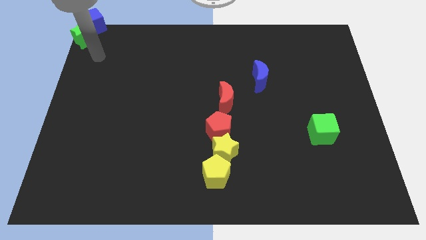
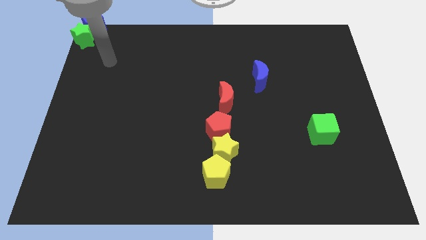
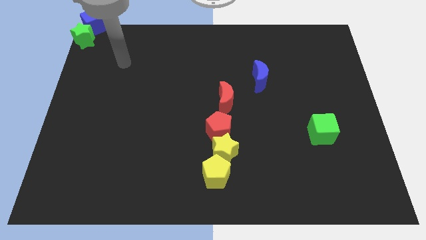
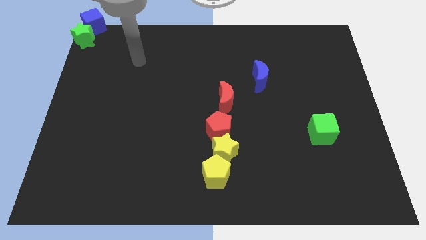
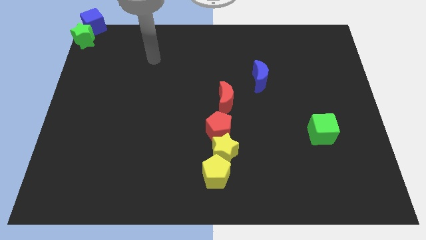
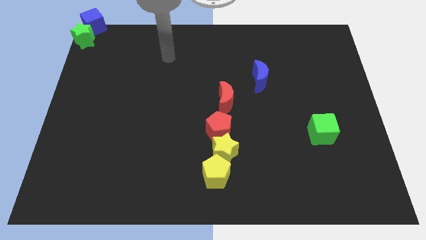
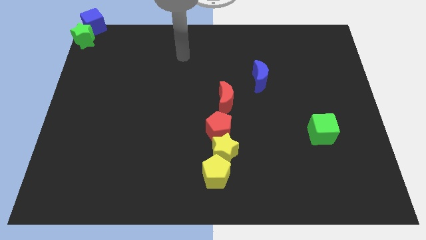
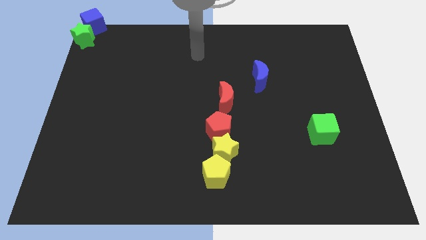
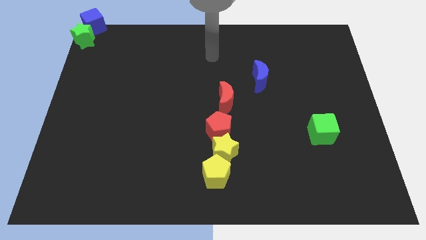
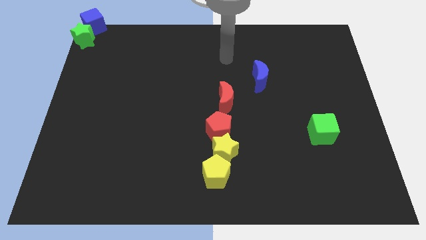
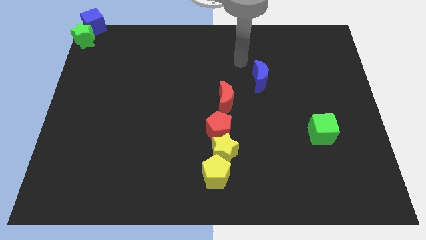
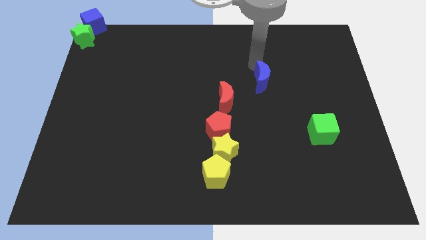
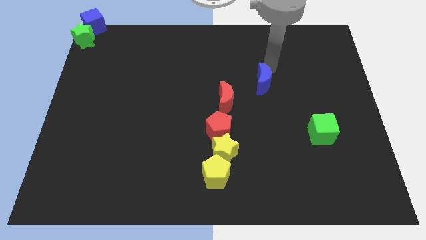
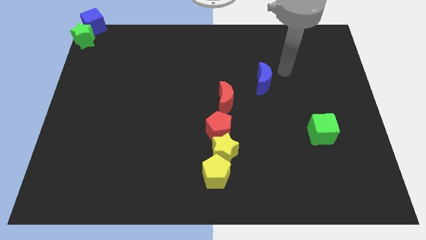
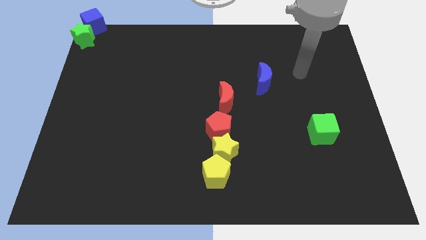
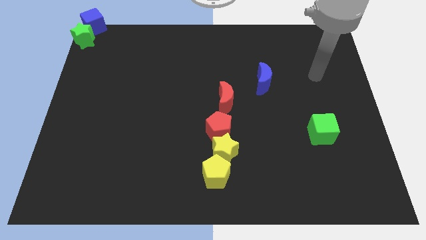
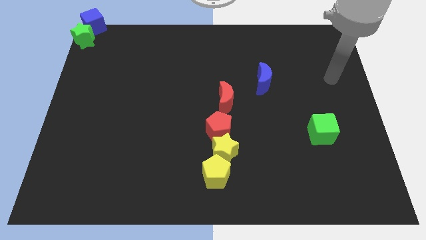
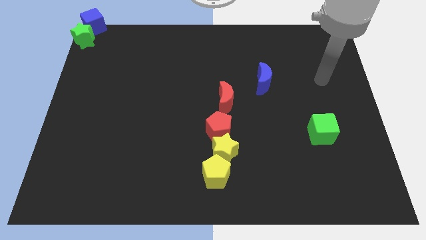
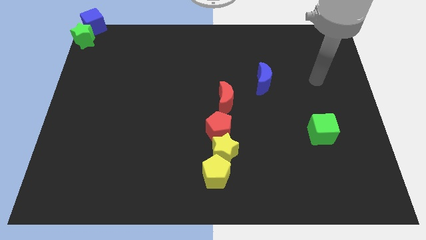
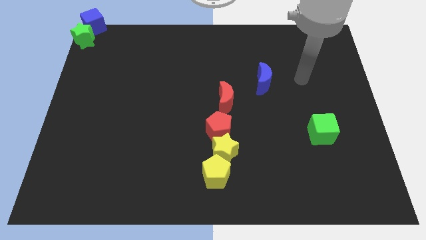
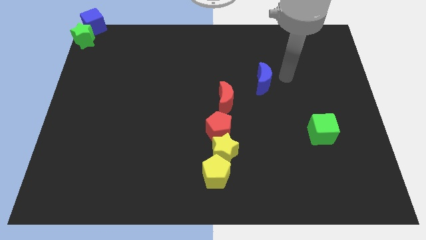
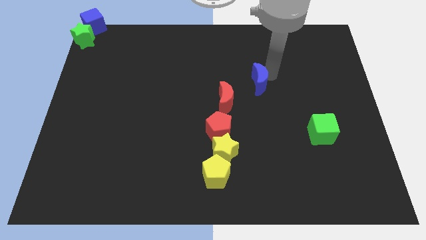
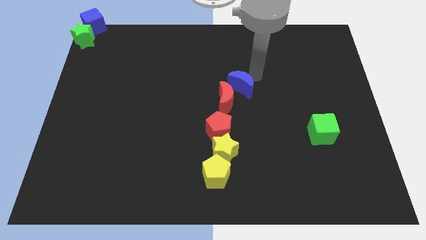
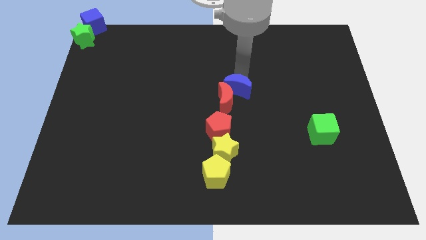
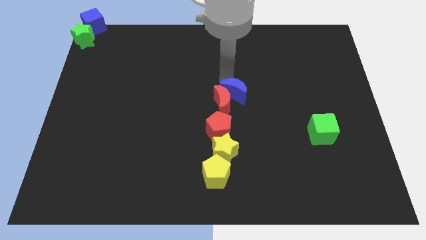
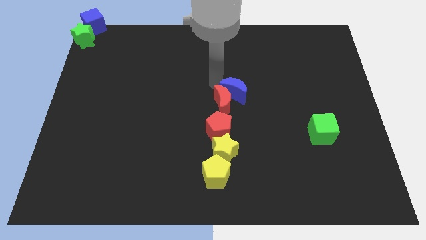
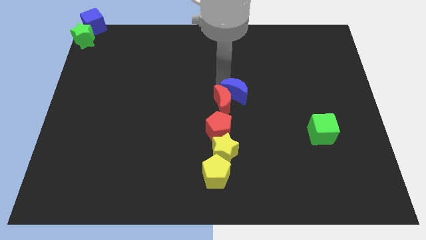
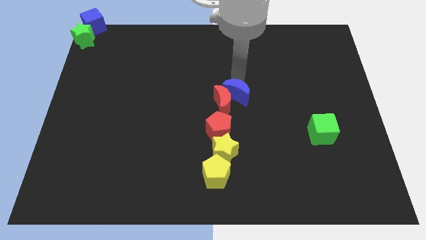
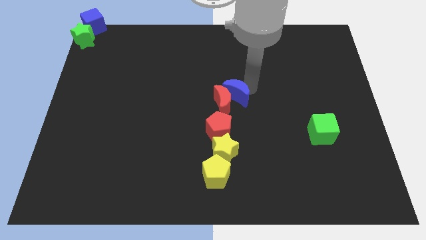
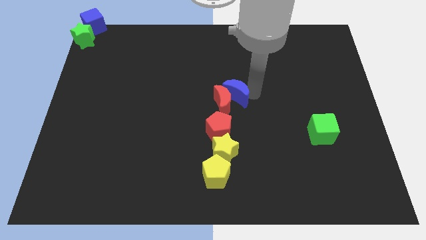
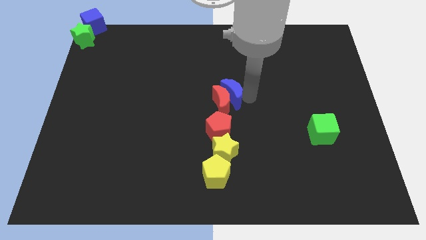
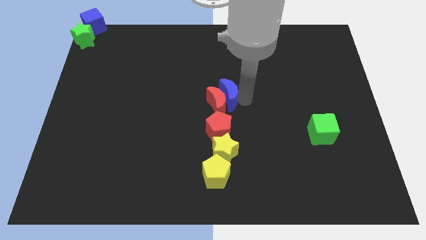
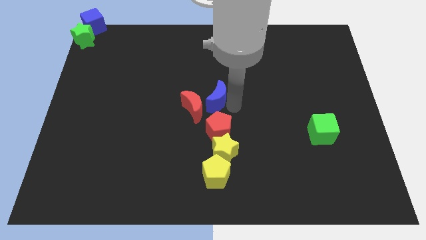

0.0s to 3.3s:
push the blue crescent into red crescent

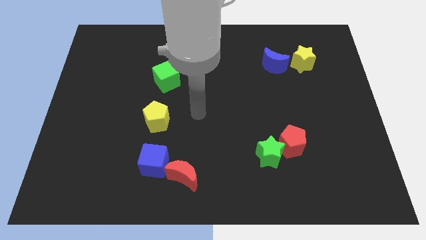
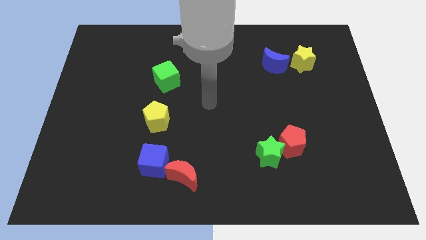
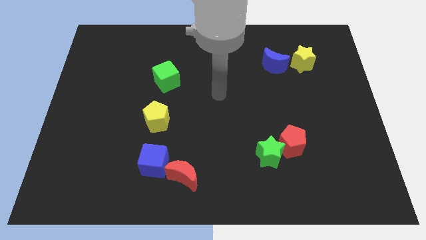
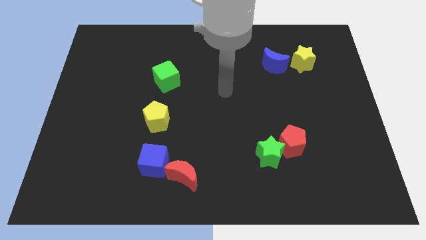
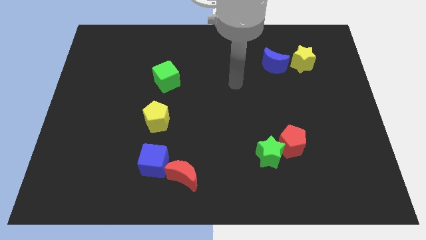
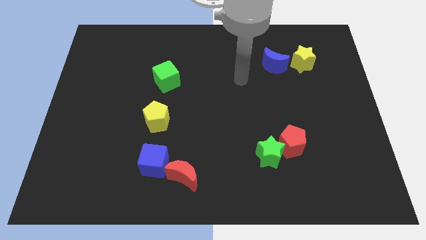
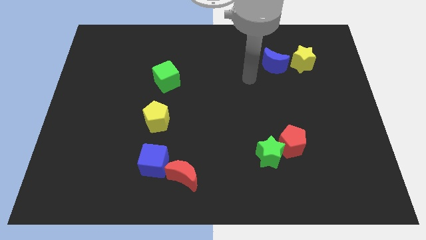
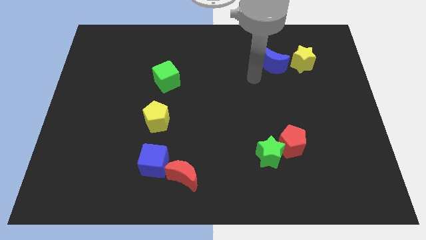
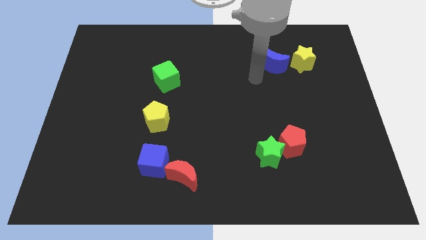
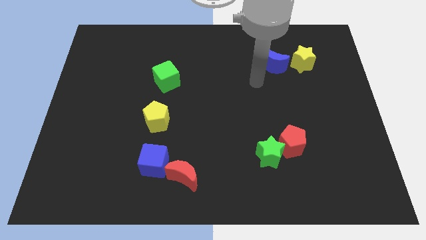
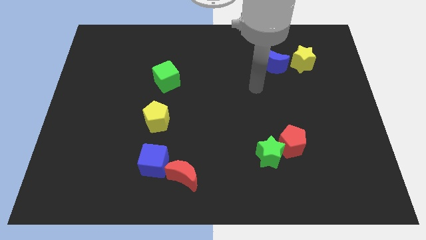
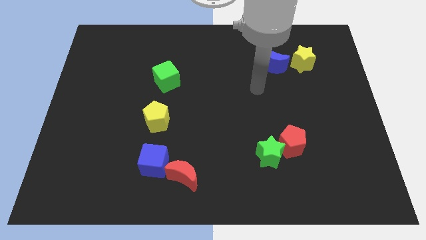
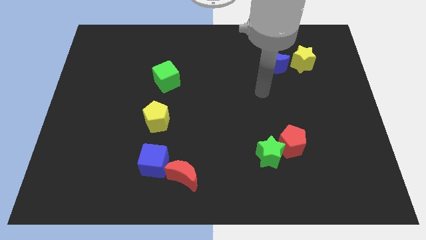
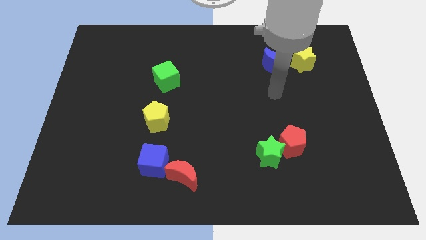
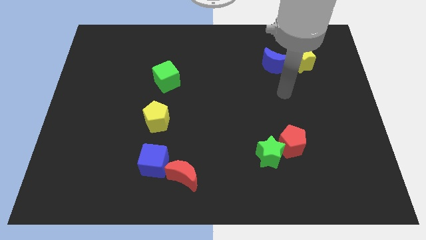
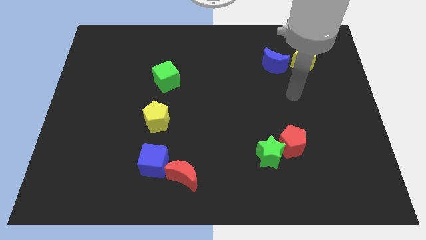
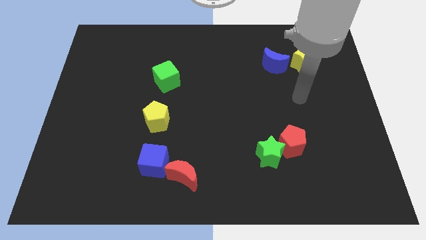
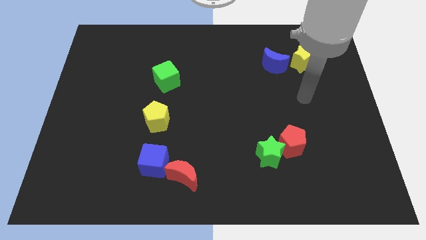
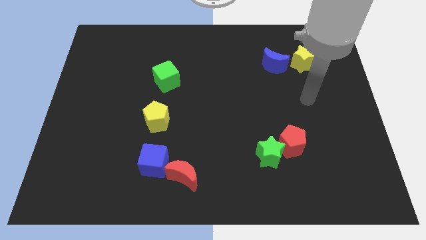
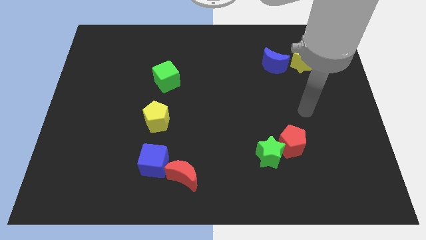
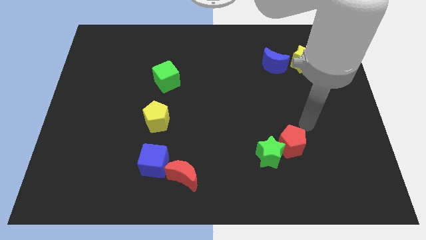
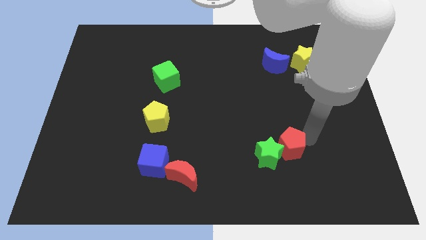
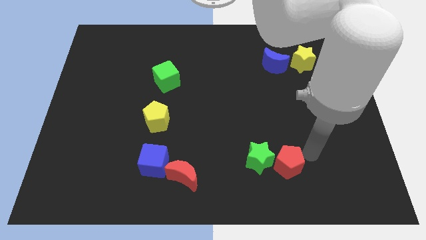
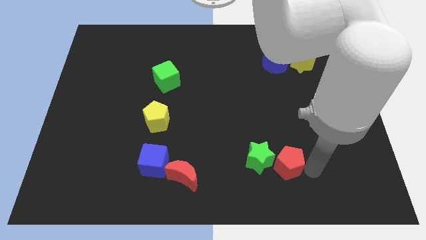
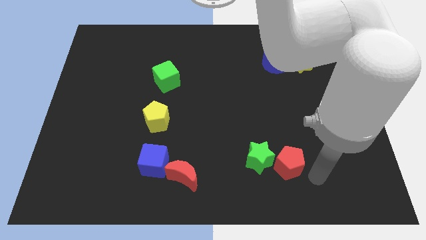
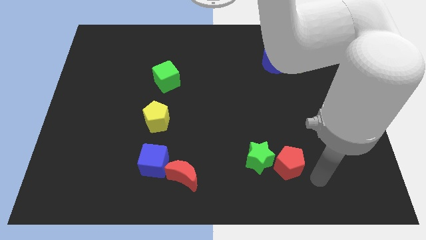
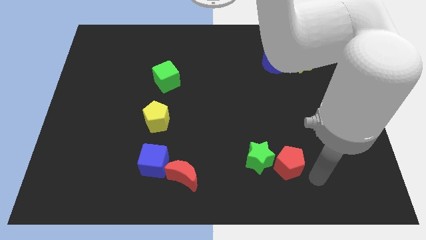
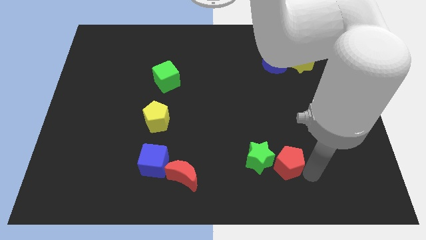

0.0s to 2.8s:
move the red pentagon right beside the green star

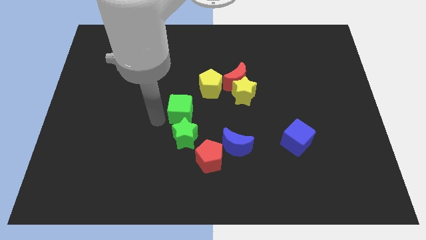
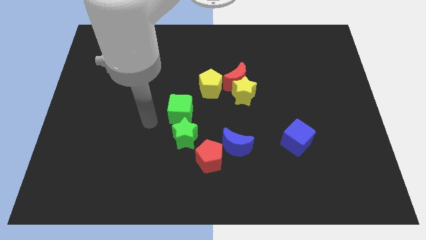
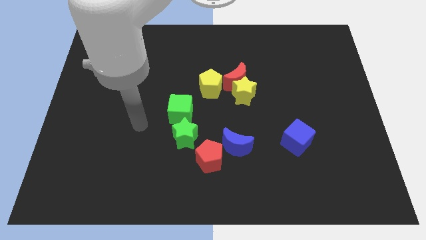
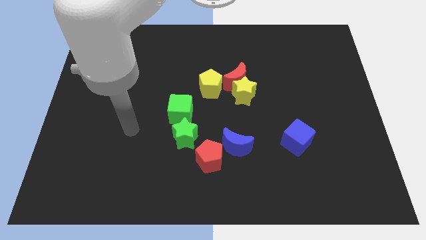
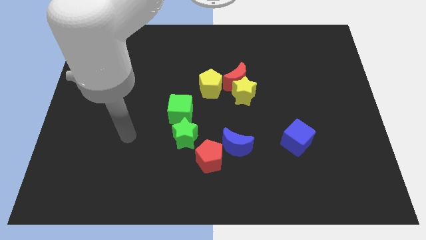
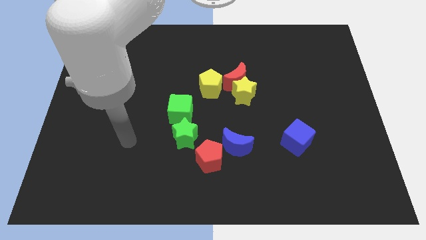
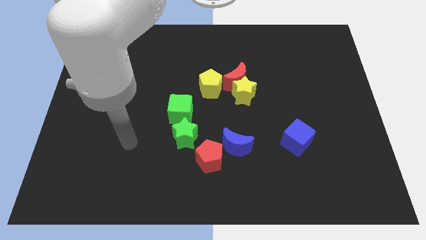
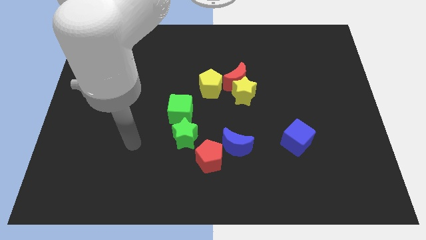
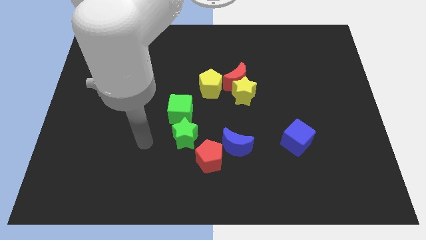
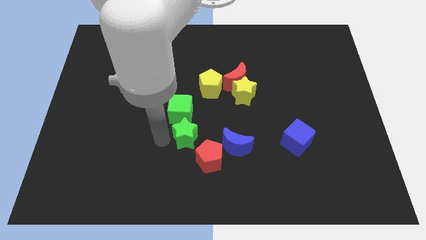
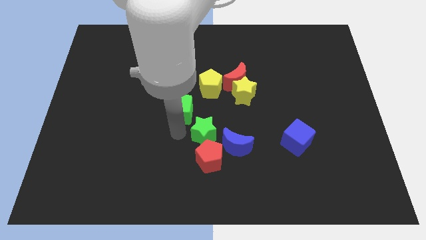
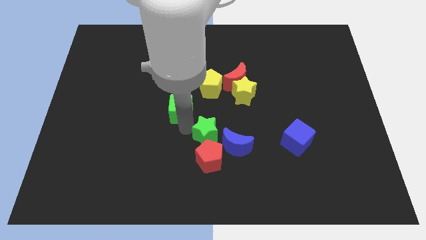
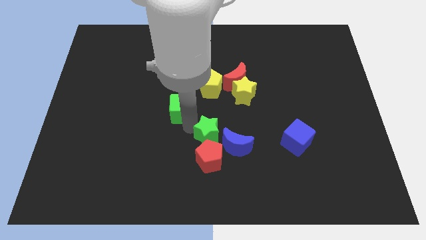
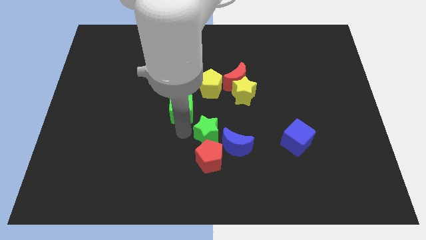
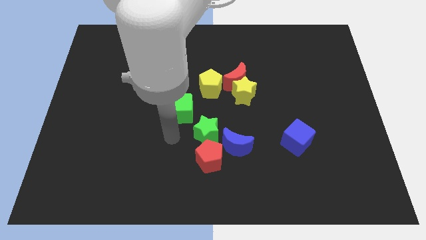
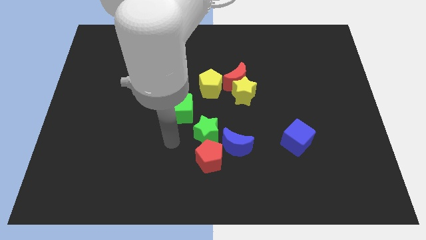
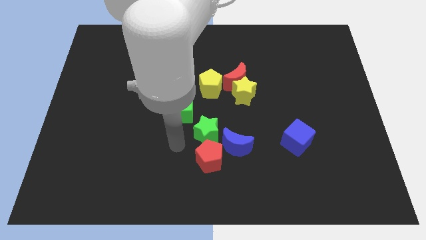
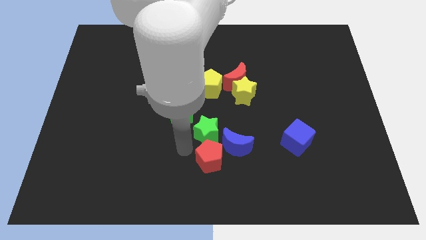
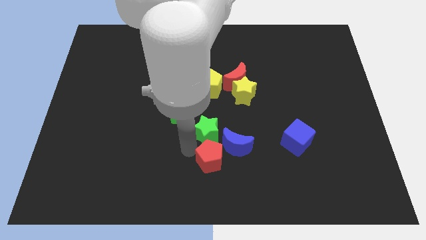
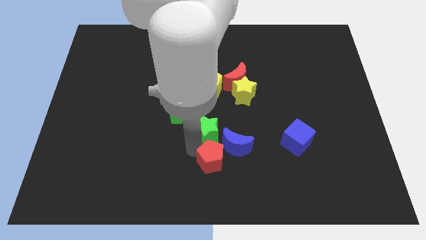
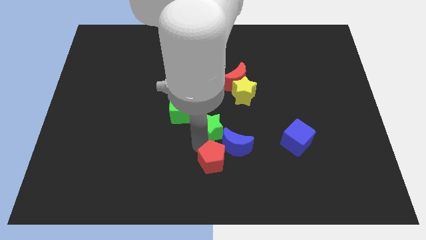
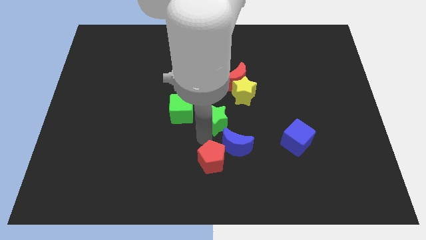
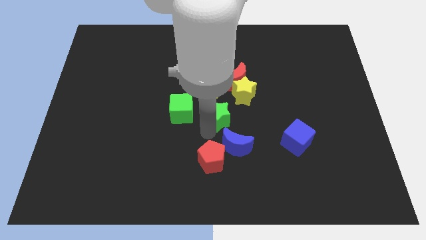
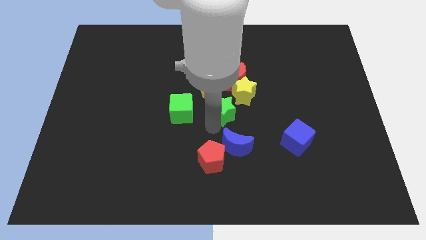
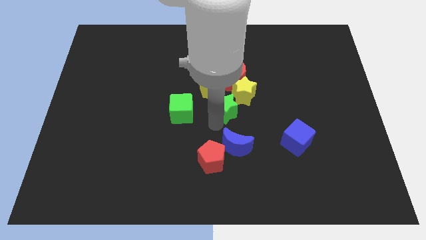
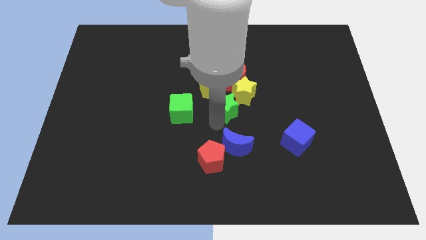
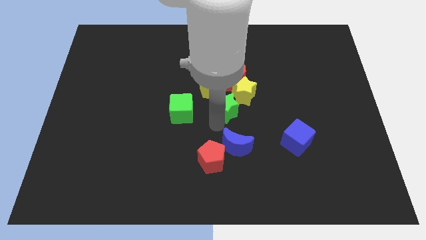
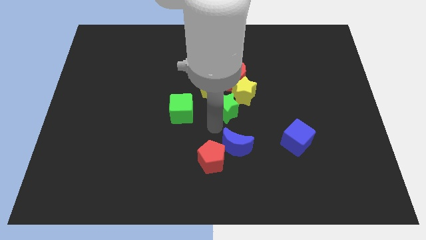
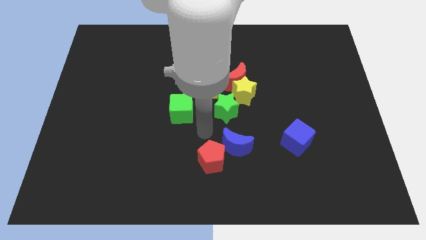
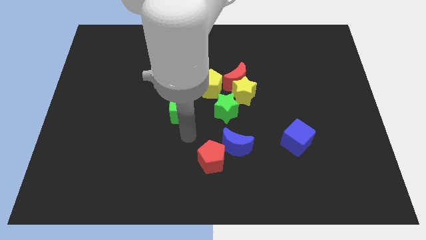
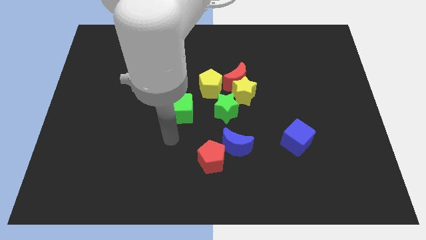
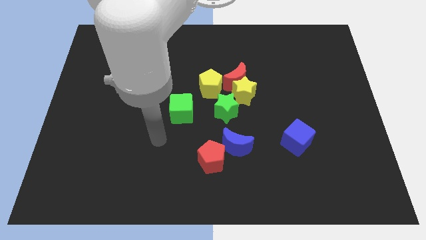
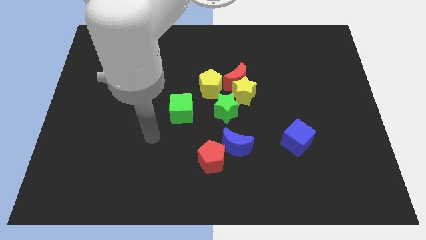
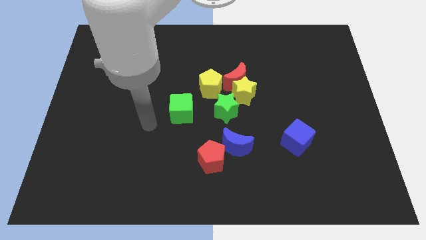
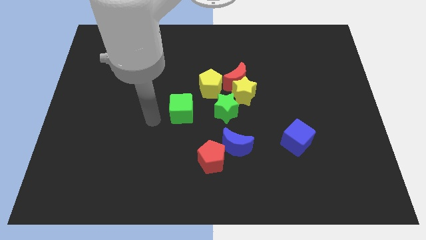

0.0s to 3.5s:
move the green star to the center of board
